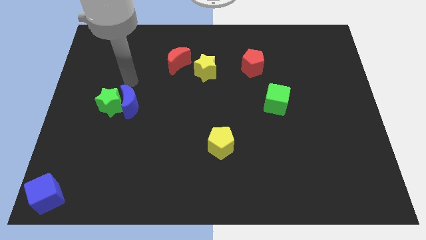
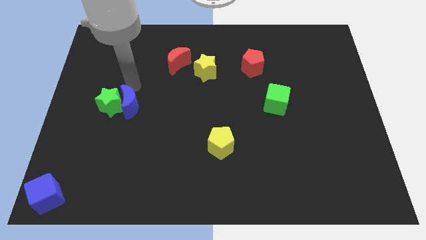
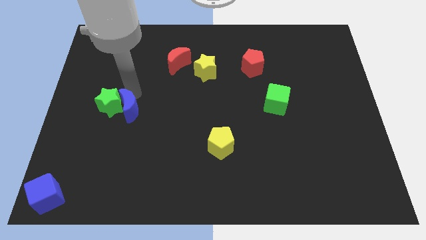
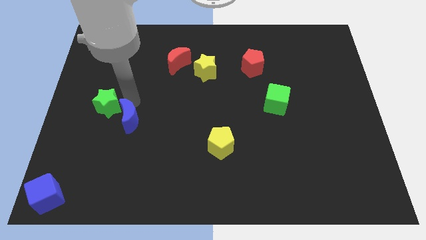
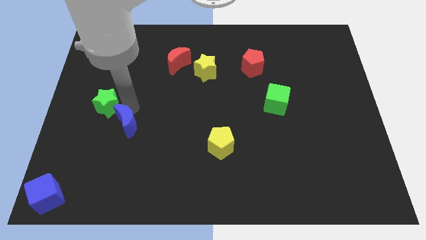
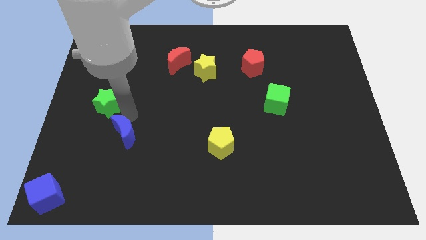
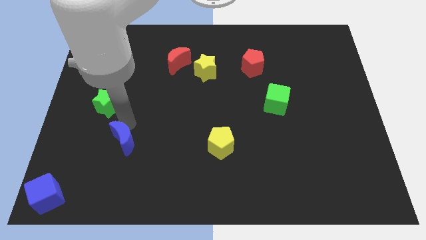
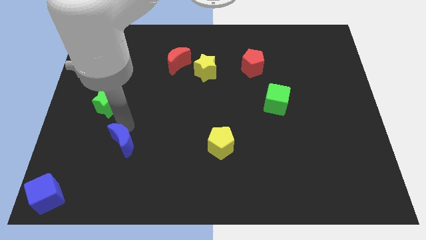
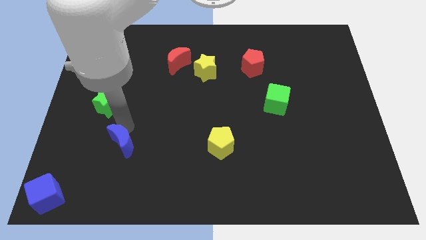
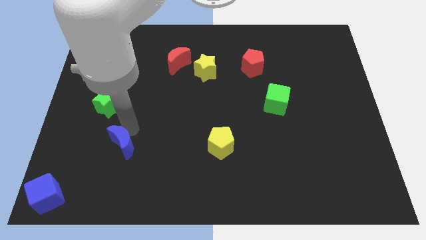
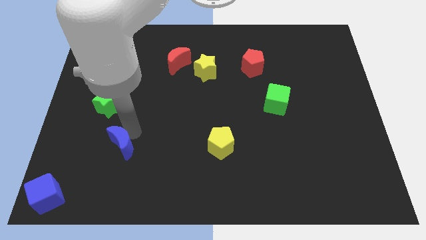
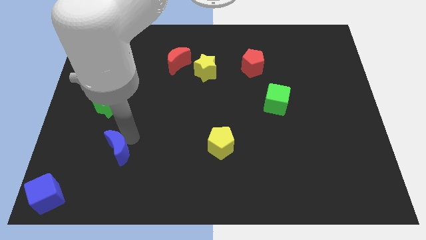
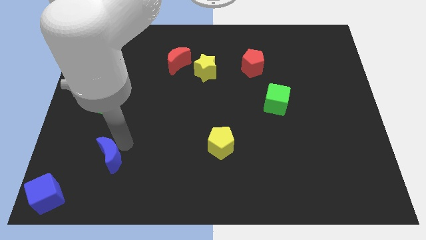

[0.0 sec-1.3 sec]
separate the blue moon and green star

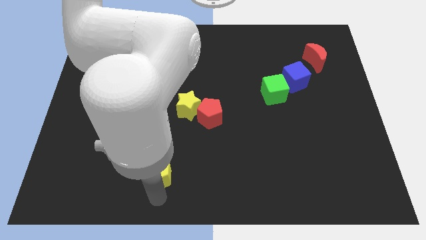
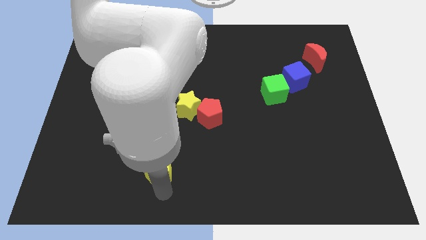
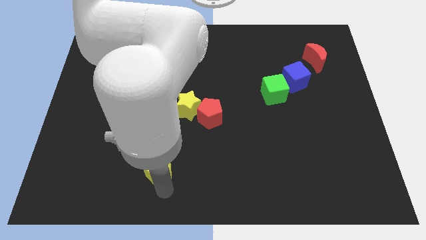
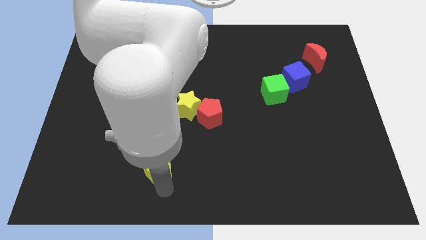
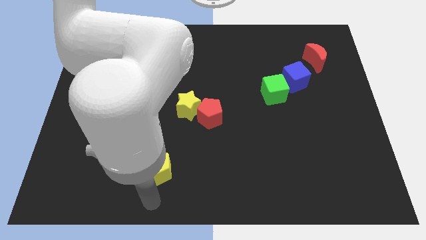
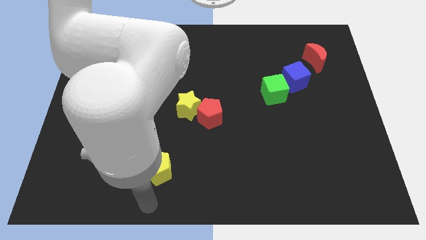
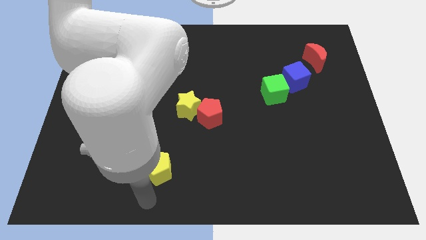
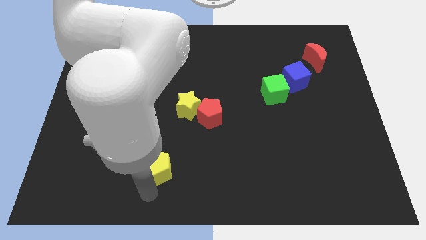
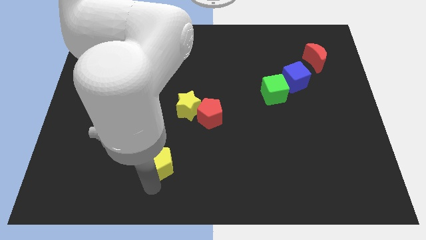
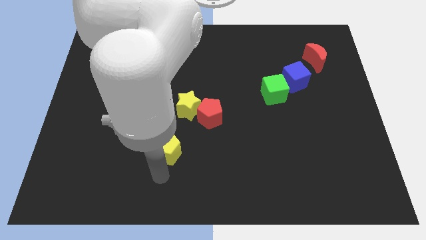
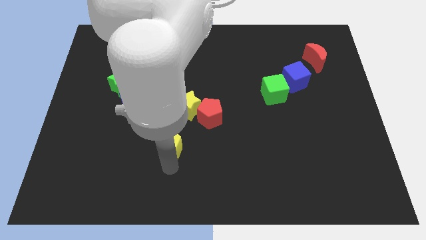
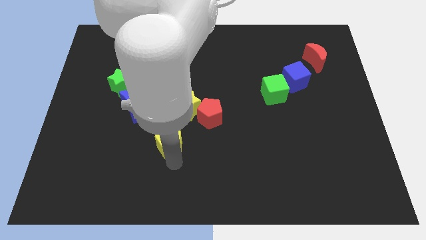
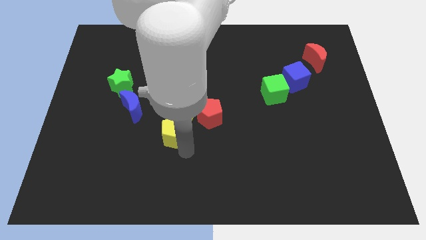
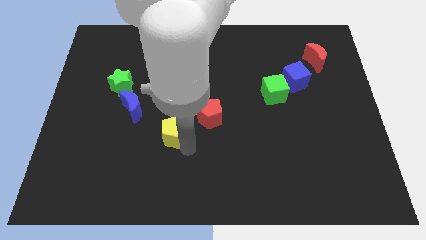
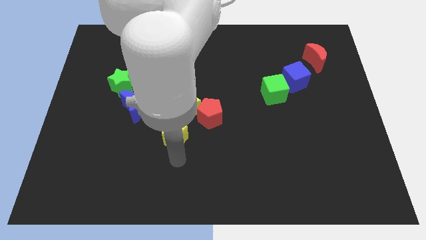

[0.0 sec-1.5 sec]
place yellow pentagon below the yellow star

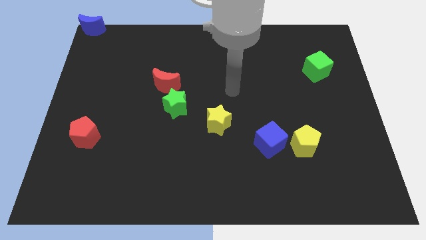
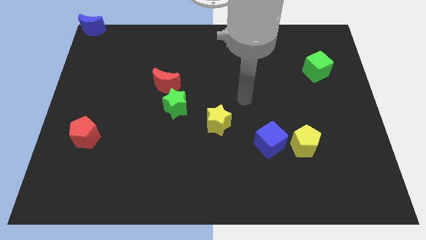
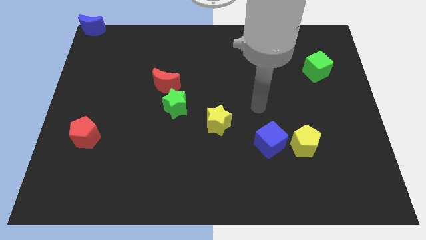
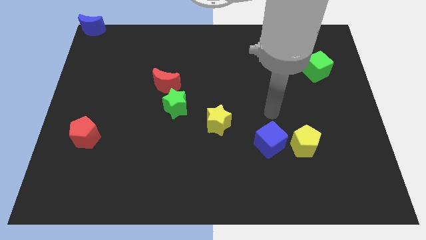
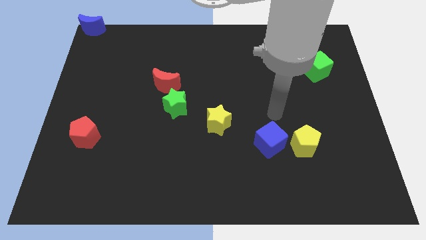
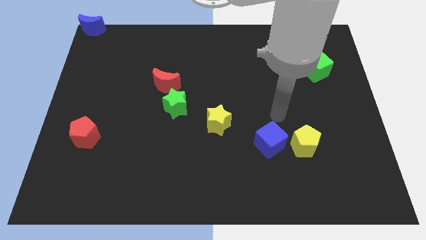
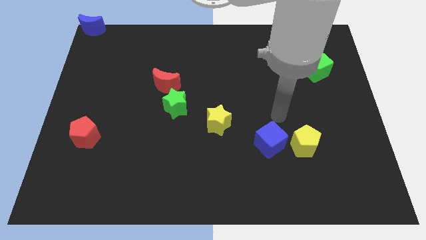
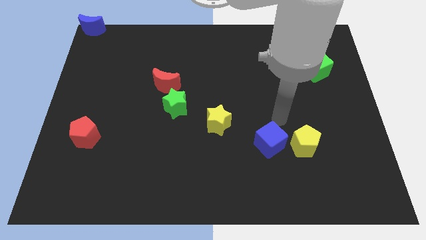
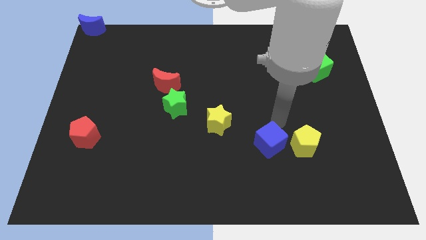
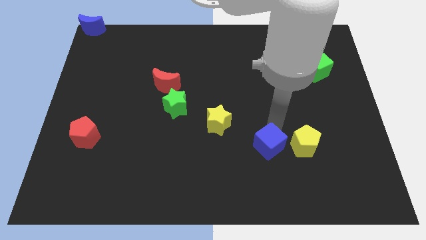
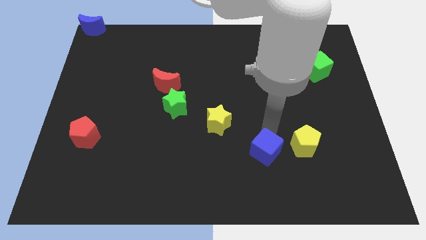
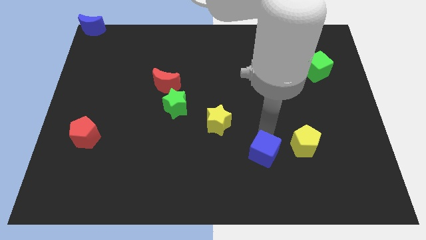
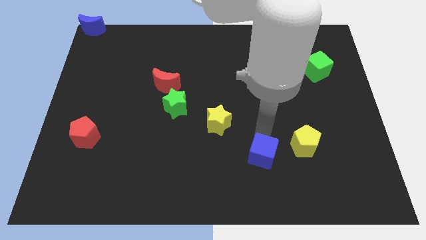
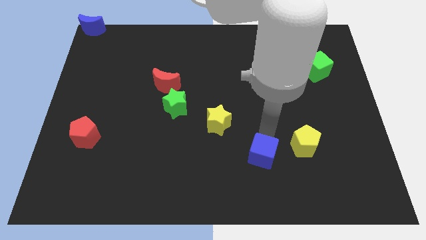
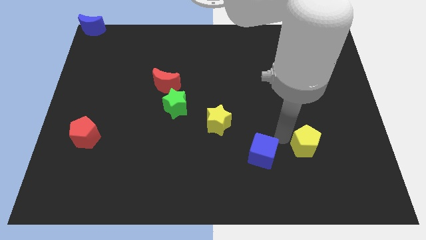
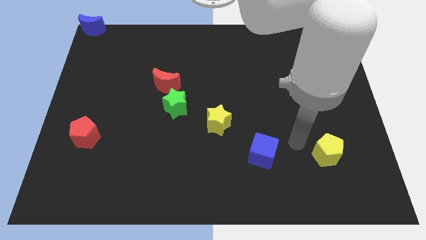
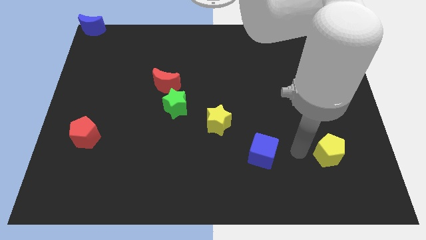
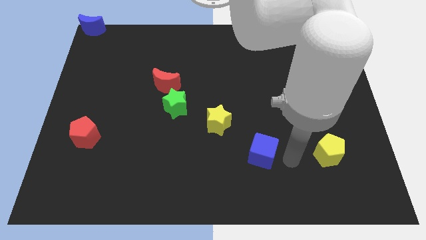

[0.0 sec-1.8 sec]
separate the blue cube and yellow pentagon

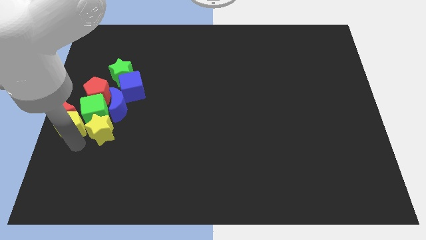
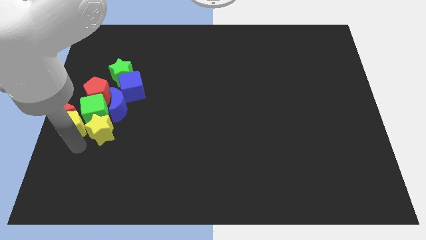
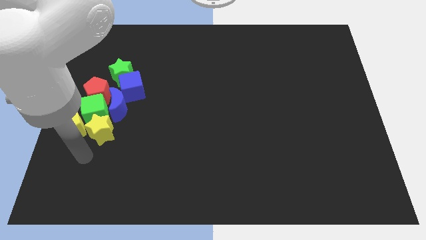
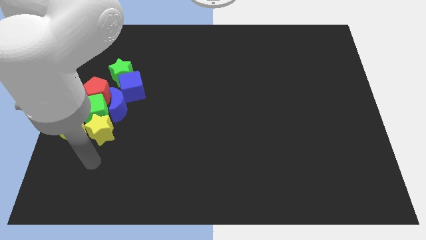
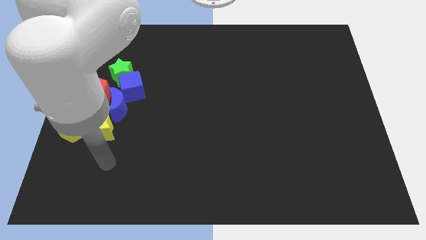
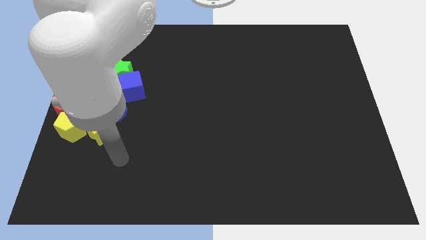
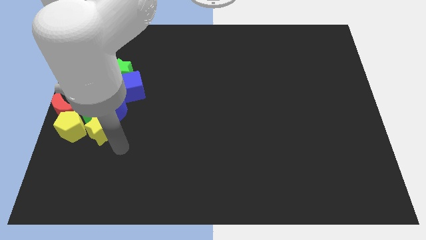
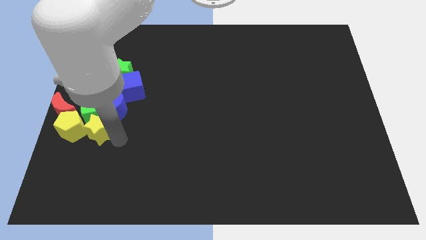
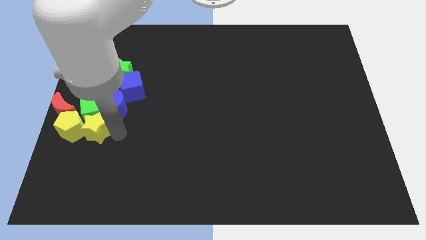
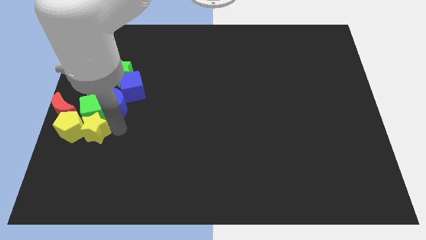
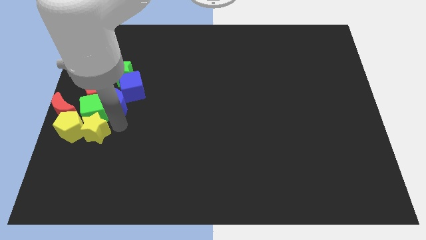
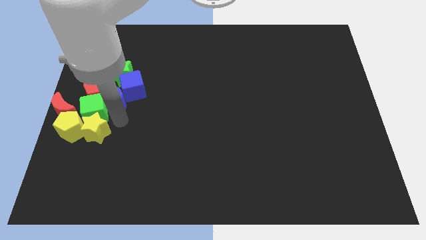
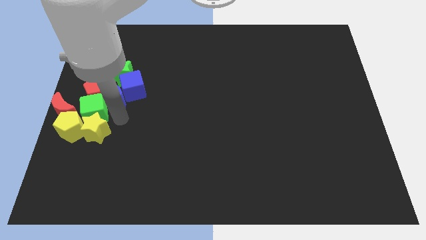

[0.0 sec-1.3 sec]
move your arm below the blue moon

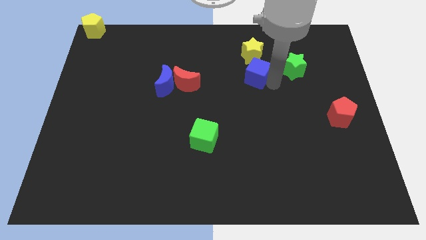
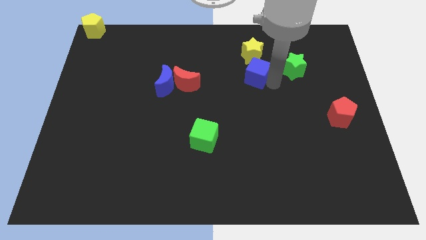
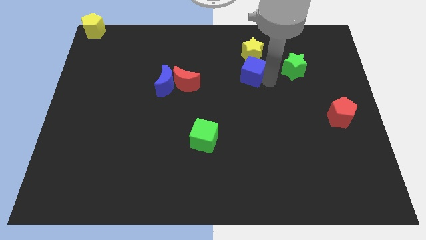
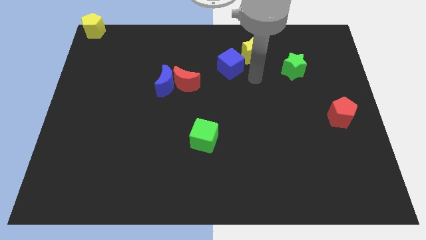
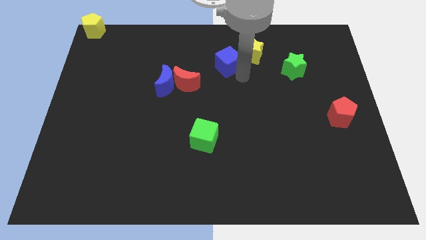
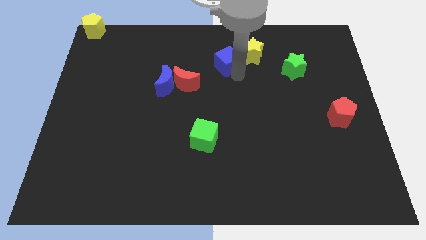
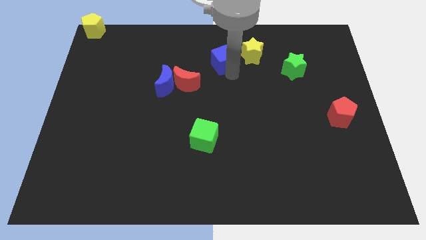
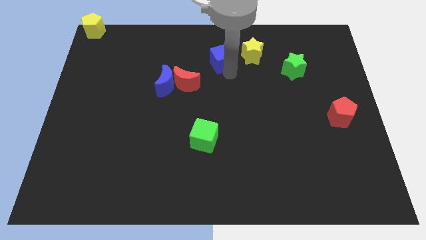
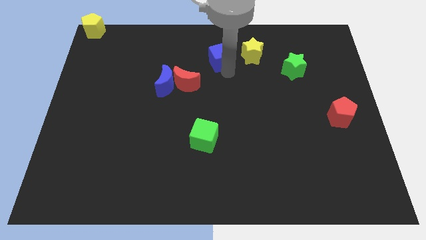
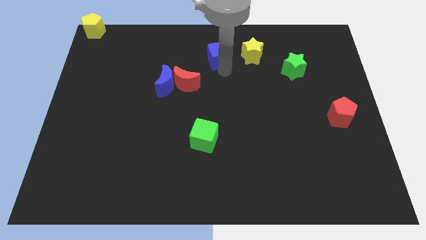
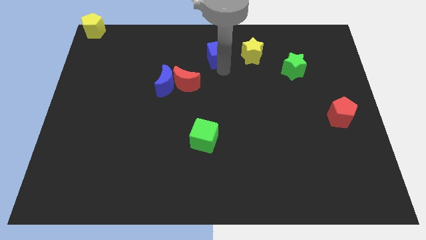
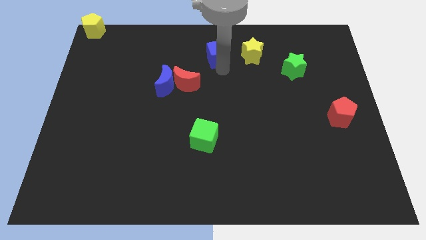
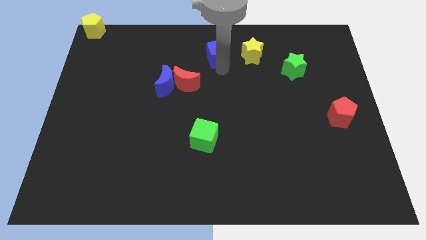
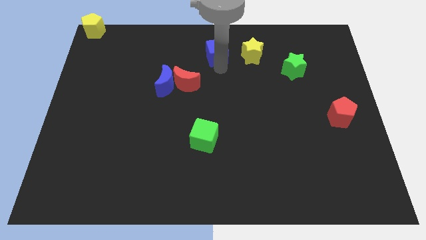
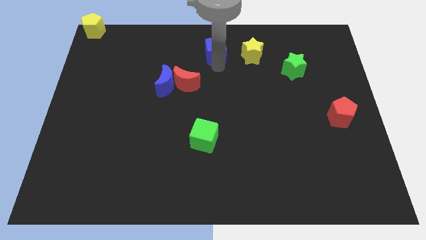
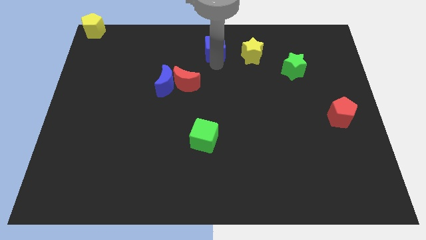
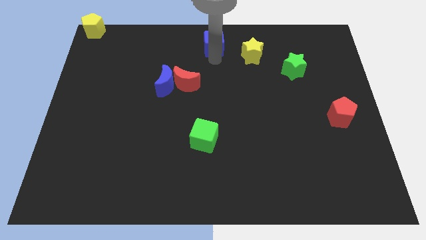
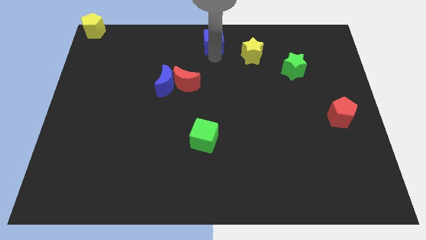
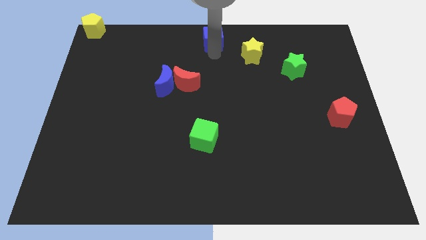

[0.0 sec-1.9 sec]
move the blue cube diagonally top right to the red moon

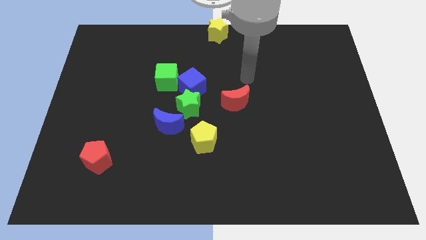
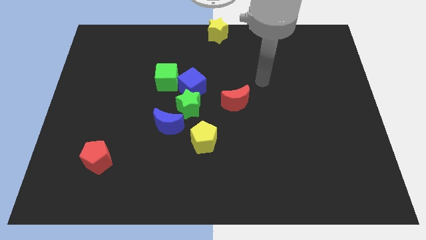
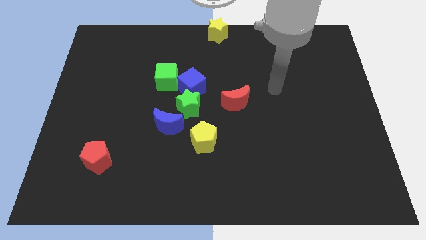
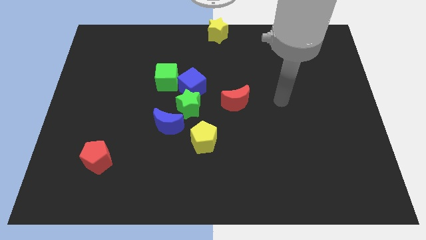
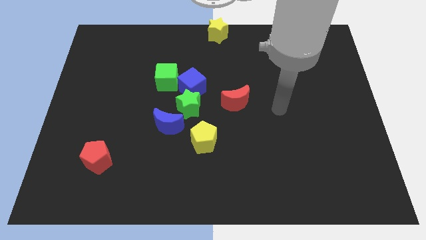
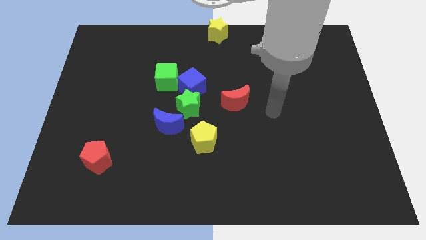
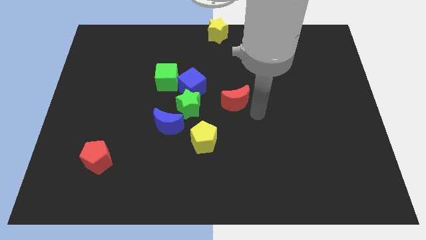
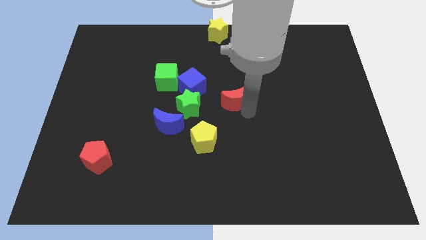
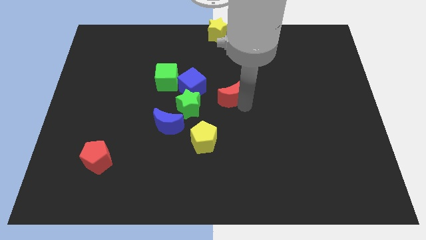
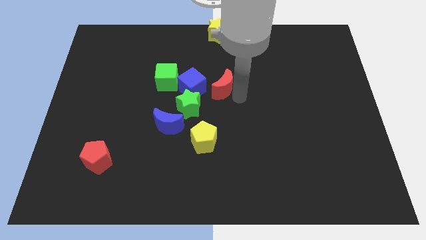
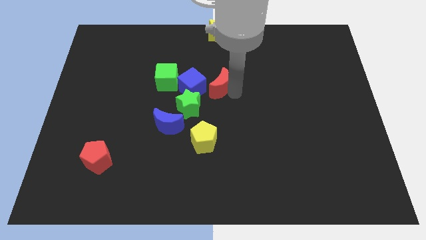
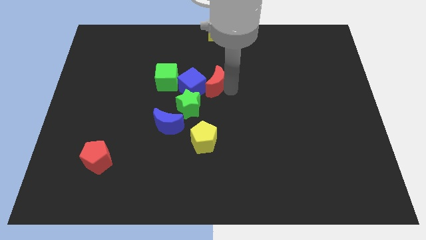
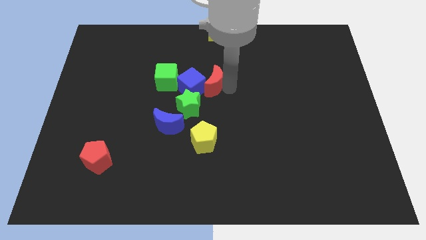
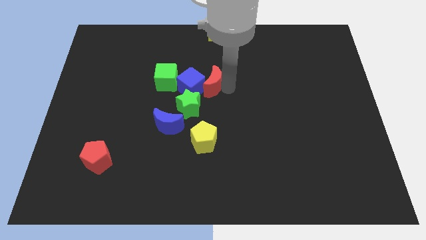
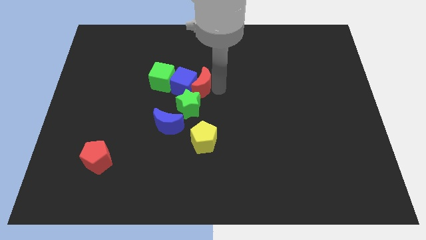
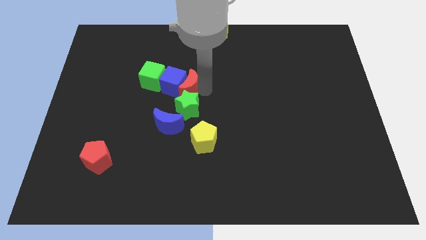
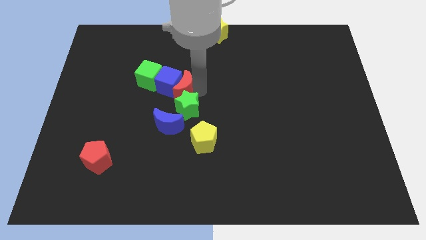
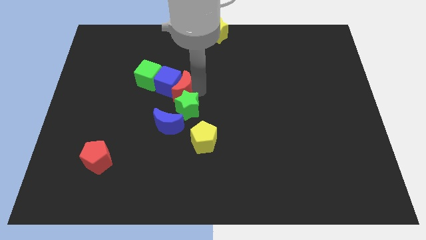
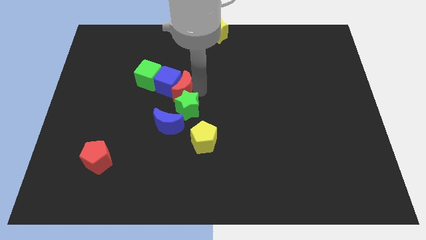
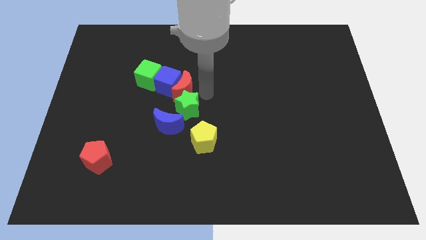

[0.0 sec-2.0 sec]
drag the red moon into the blue cube
